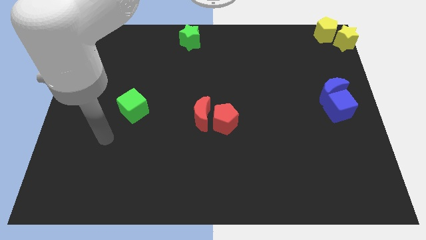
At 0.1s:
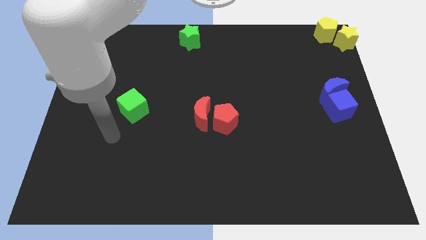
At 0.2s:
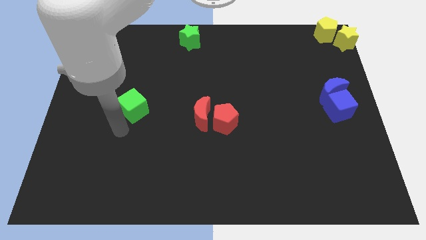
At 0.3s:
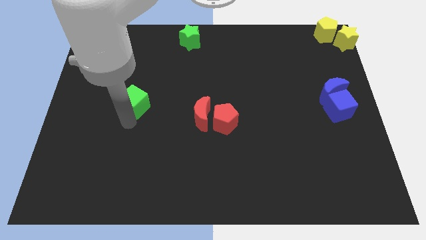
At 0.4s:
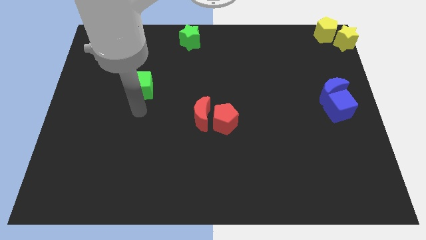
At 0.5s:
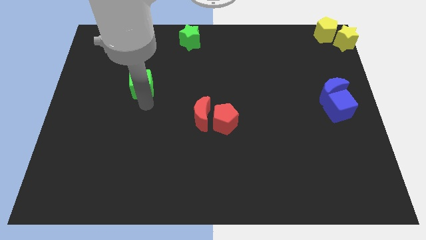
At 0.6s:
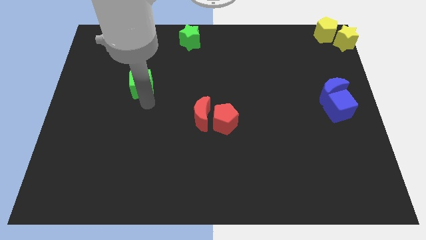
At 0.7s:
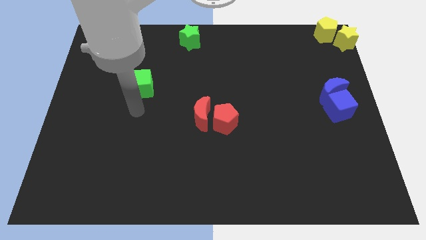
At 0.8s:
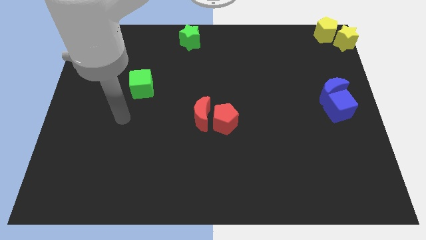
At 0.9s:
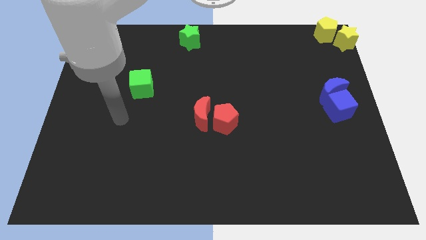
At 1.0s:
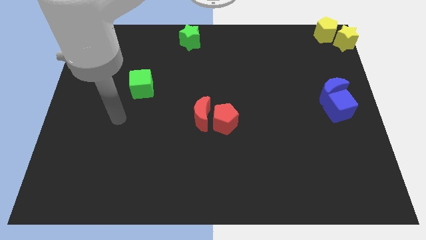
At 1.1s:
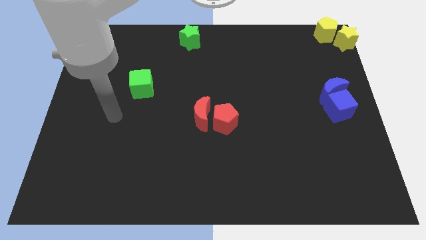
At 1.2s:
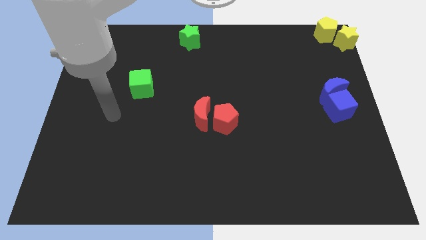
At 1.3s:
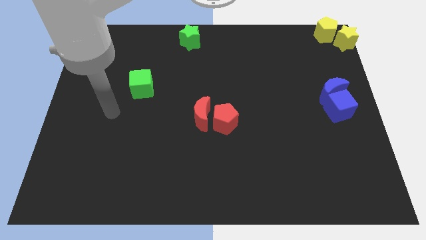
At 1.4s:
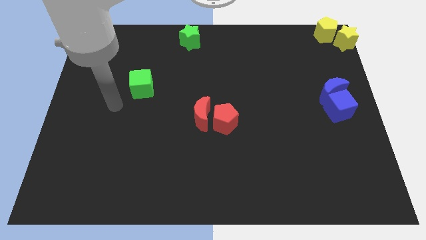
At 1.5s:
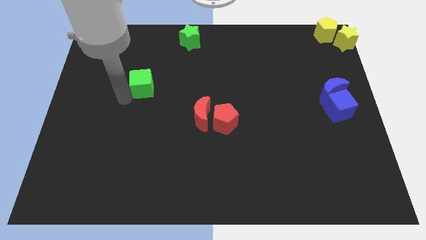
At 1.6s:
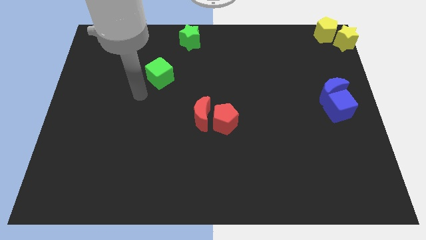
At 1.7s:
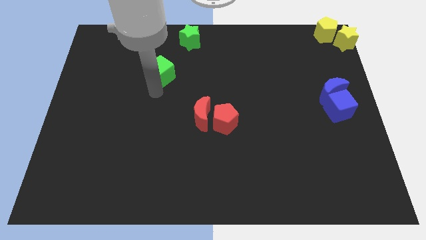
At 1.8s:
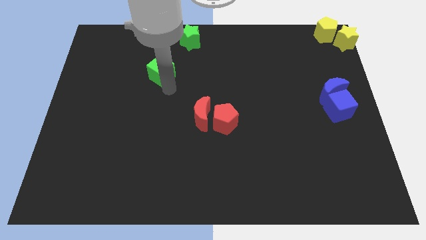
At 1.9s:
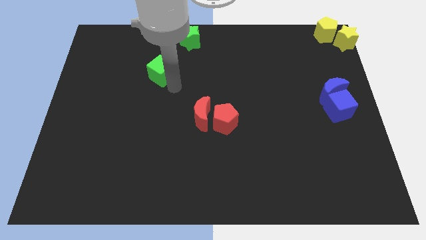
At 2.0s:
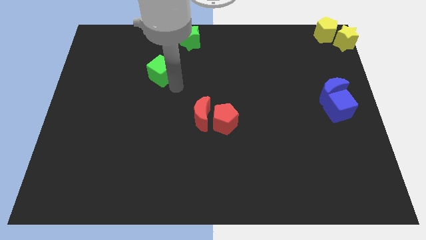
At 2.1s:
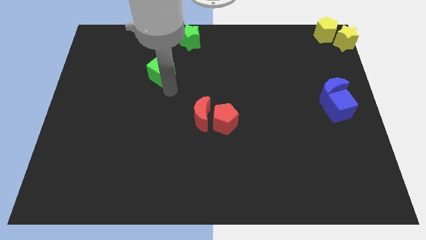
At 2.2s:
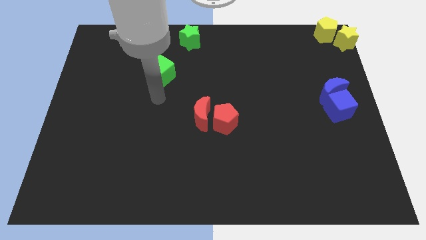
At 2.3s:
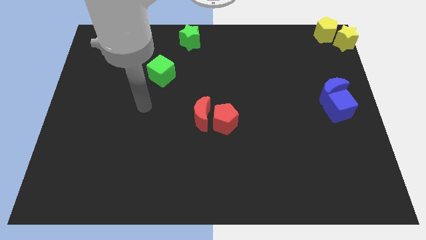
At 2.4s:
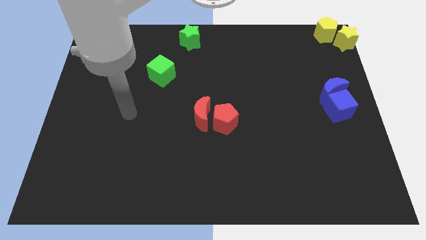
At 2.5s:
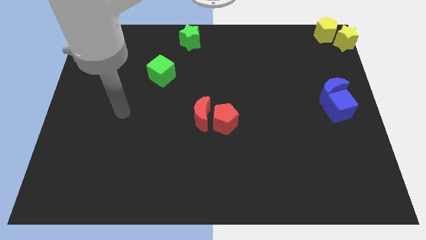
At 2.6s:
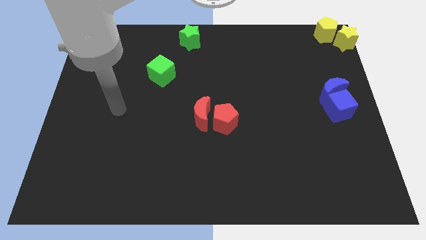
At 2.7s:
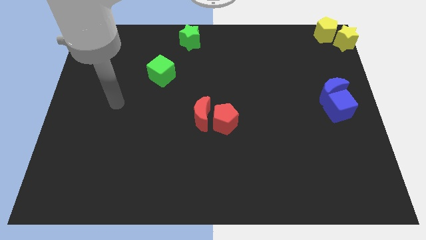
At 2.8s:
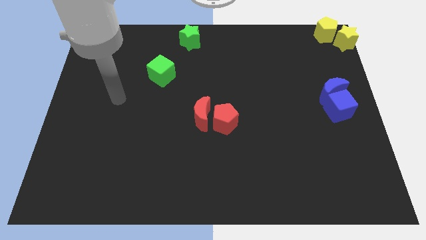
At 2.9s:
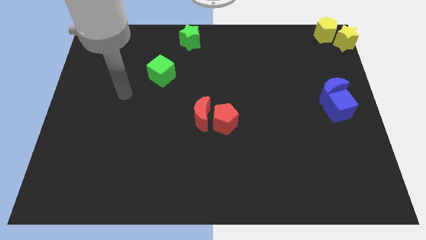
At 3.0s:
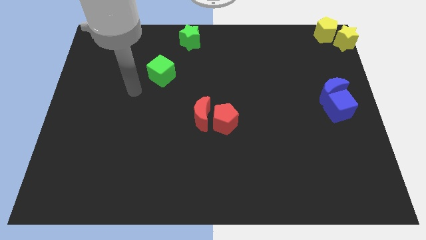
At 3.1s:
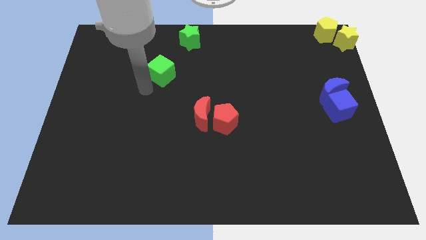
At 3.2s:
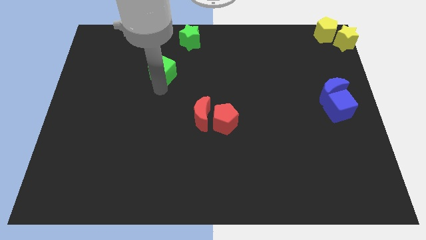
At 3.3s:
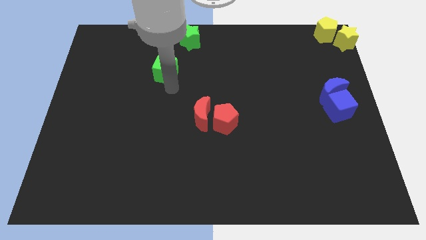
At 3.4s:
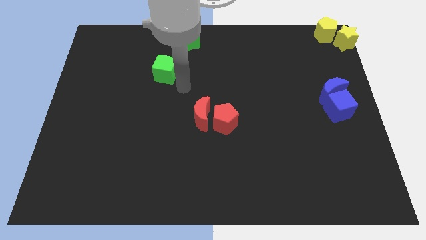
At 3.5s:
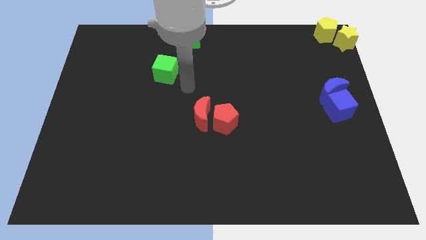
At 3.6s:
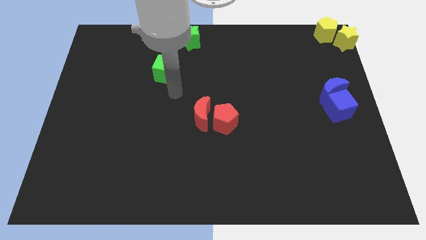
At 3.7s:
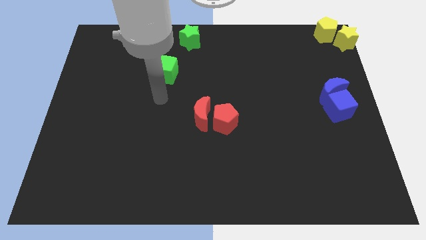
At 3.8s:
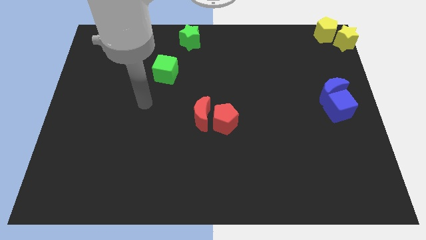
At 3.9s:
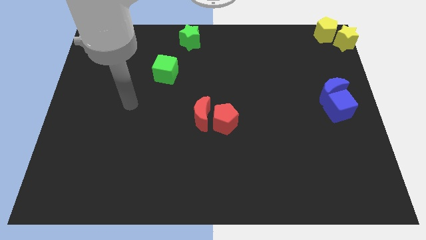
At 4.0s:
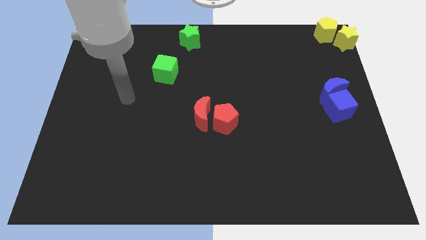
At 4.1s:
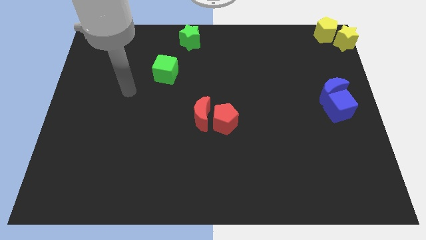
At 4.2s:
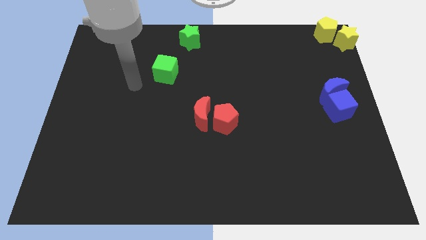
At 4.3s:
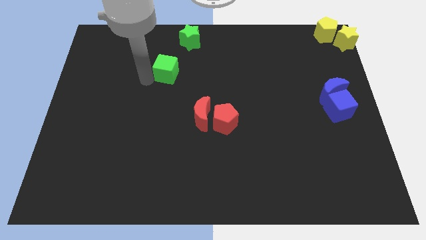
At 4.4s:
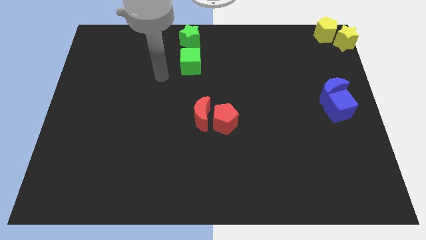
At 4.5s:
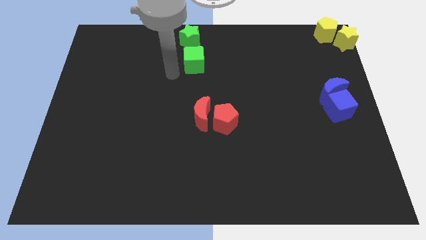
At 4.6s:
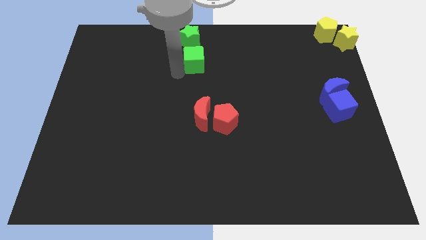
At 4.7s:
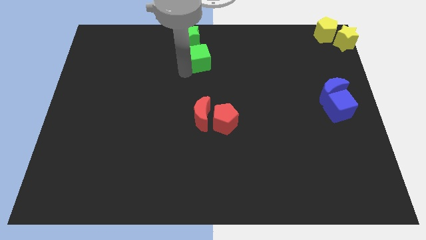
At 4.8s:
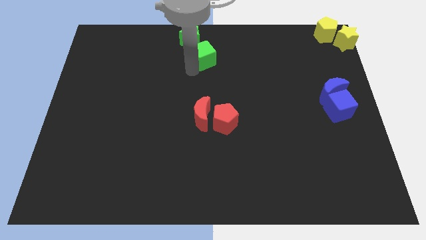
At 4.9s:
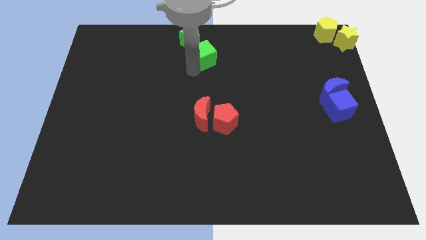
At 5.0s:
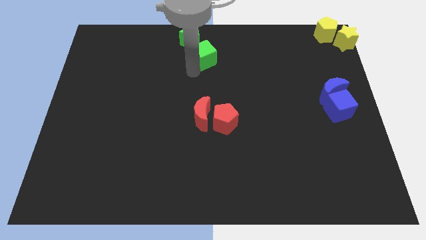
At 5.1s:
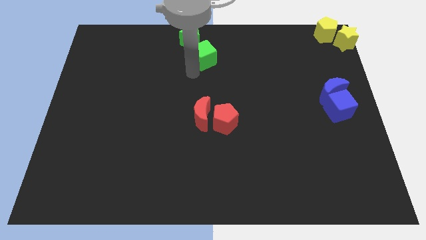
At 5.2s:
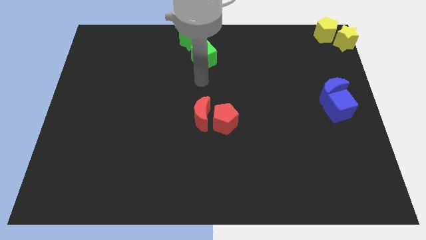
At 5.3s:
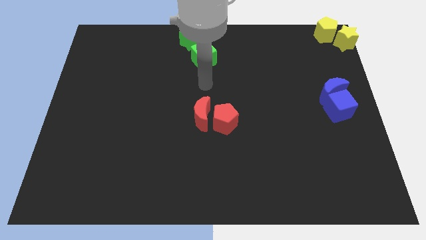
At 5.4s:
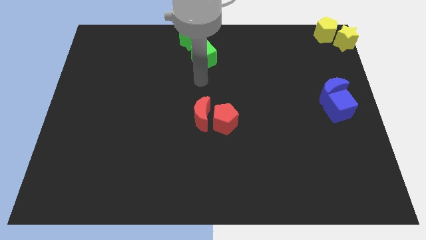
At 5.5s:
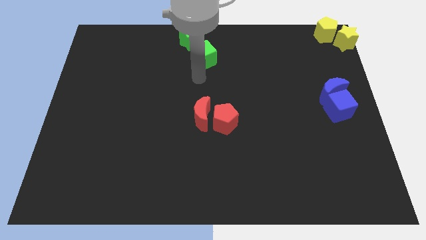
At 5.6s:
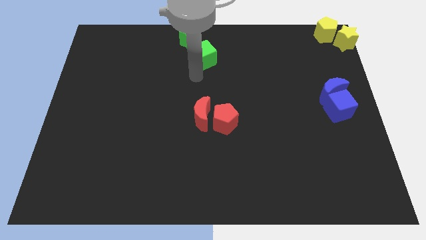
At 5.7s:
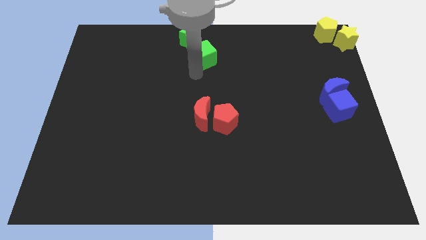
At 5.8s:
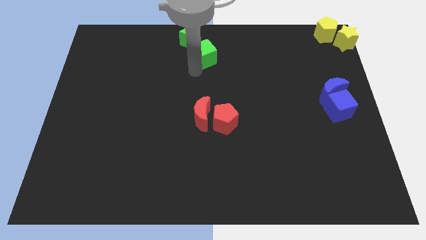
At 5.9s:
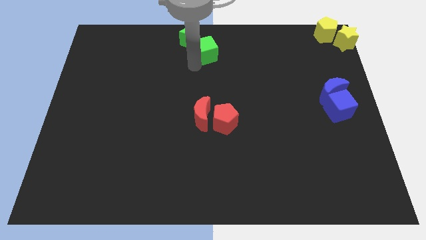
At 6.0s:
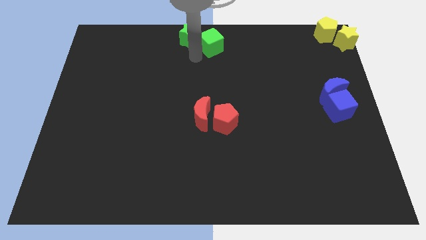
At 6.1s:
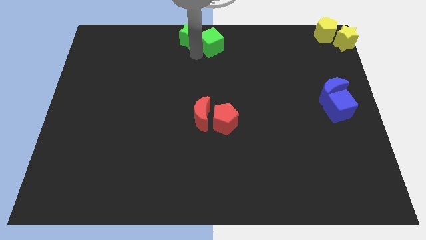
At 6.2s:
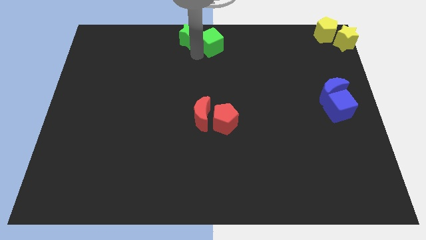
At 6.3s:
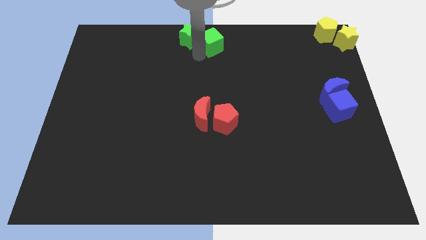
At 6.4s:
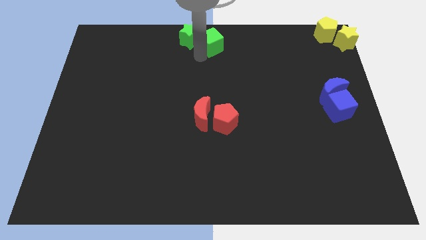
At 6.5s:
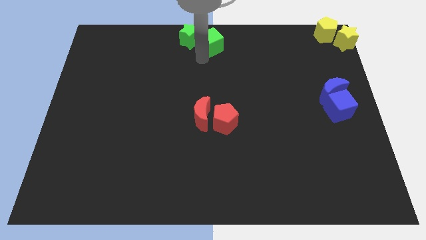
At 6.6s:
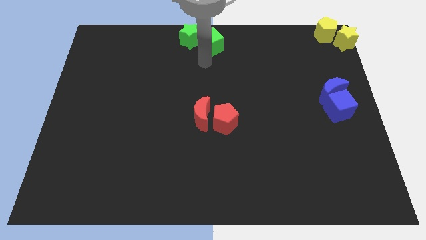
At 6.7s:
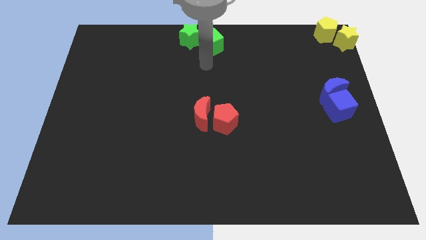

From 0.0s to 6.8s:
push the green cube to the bottom of the green star

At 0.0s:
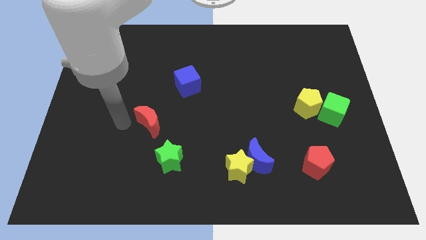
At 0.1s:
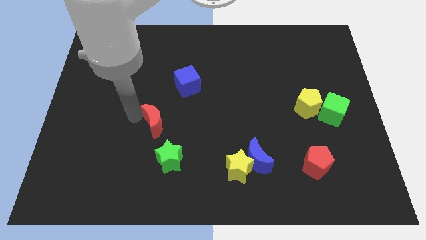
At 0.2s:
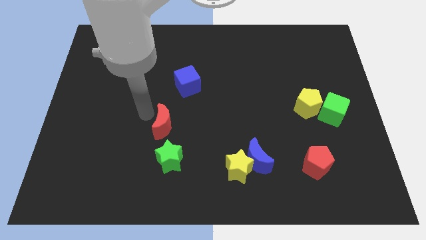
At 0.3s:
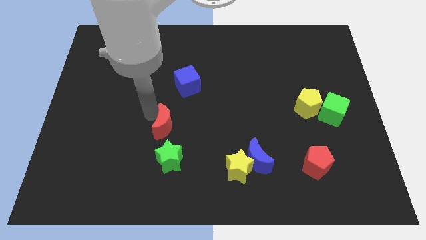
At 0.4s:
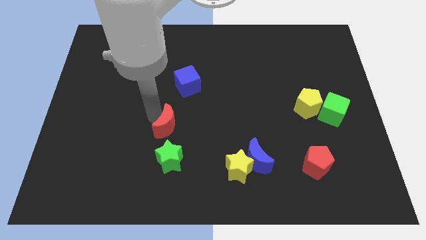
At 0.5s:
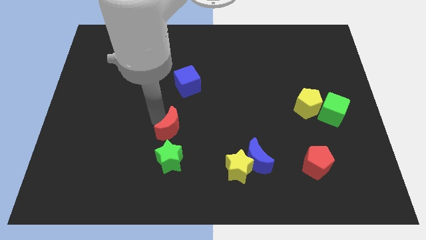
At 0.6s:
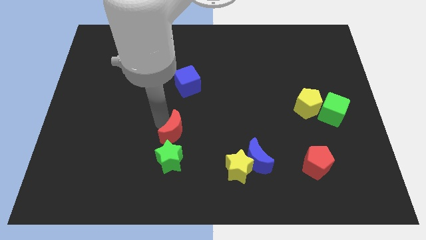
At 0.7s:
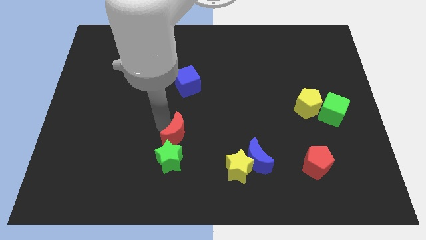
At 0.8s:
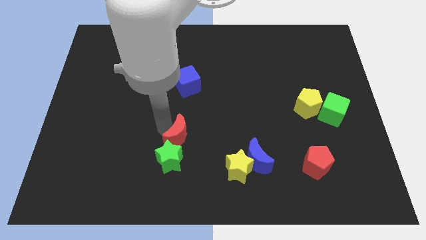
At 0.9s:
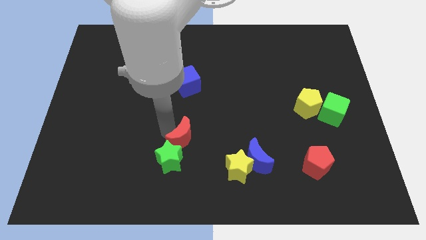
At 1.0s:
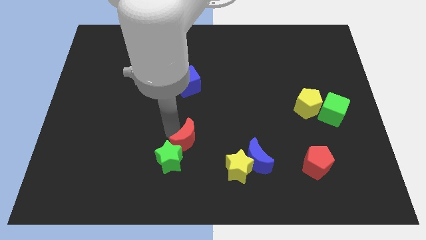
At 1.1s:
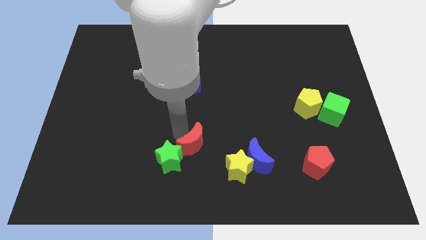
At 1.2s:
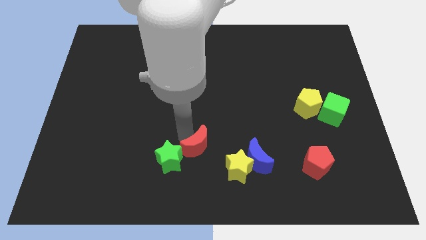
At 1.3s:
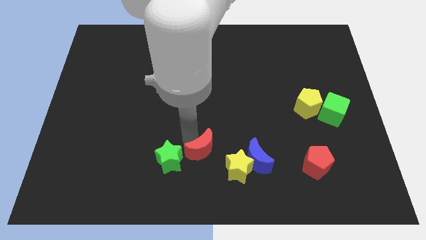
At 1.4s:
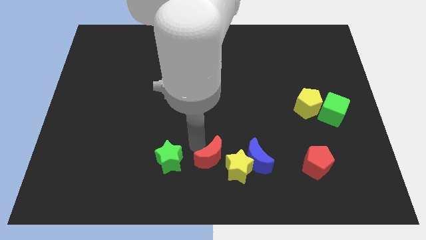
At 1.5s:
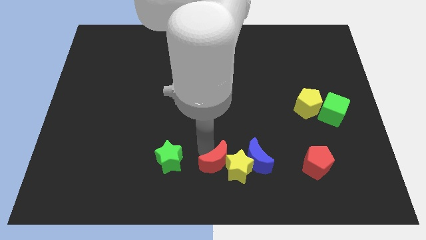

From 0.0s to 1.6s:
place the red moon diagonal to the yellow star

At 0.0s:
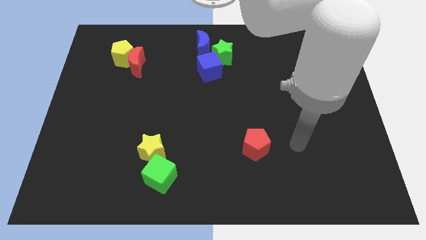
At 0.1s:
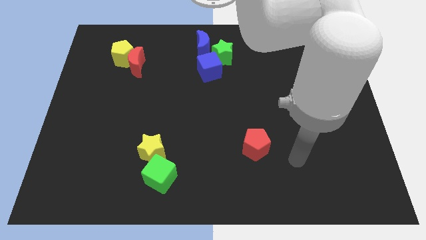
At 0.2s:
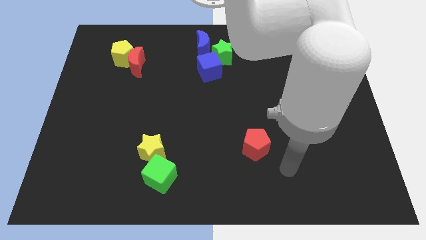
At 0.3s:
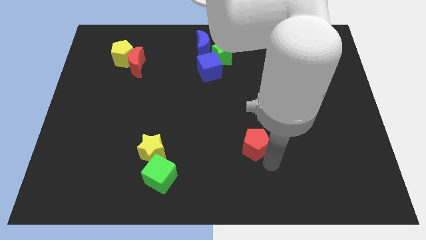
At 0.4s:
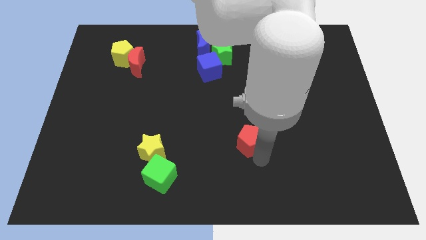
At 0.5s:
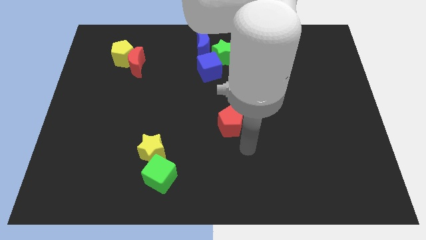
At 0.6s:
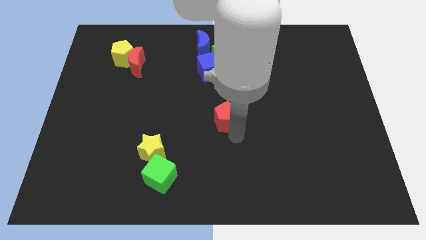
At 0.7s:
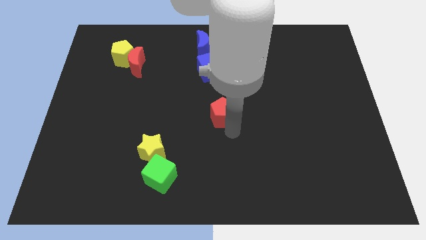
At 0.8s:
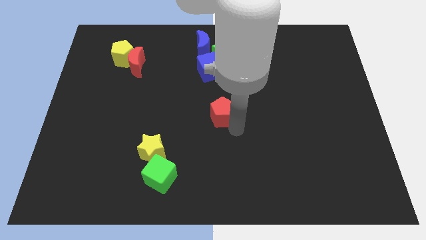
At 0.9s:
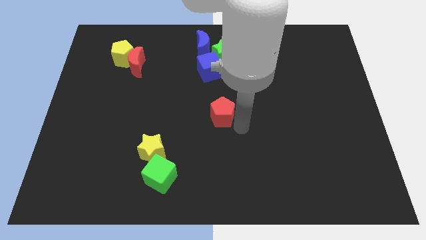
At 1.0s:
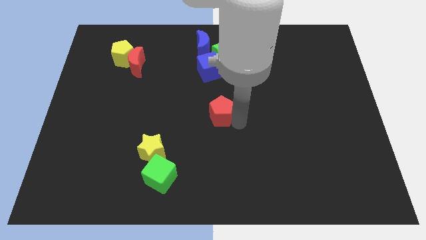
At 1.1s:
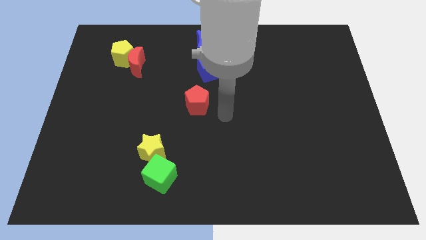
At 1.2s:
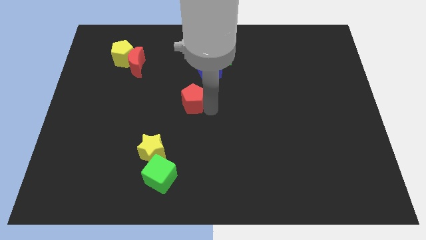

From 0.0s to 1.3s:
slide the red pentagon towards the center of the board
